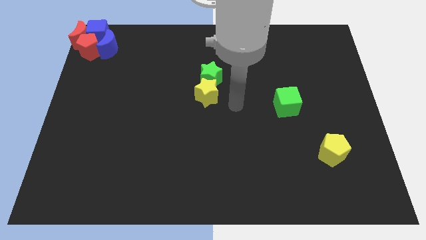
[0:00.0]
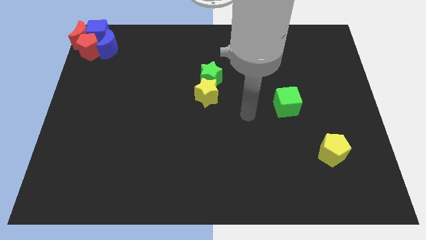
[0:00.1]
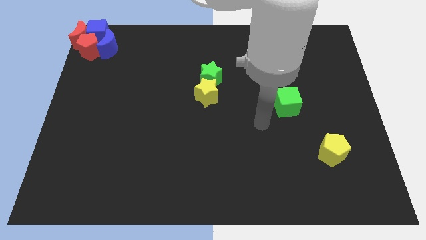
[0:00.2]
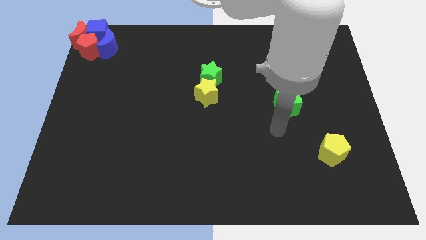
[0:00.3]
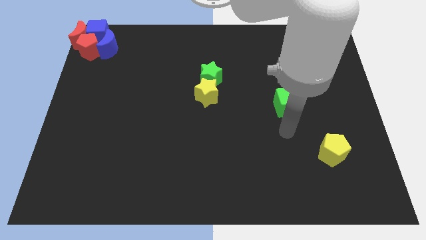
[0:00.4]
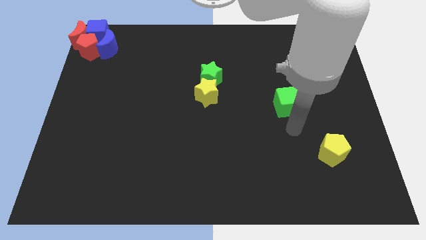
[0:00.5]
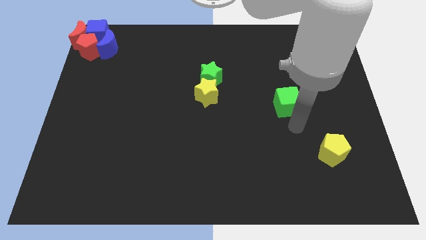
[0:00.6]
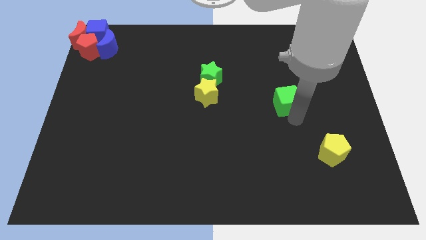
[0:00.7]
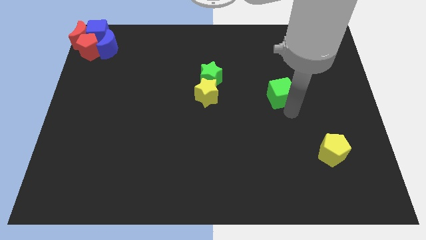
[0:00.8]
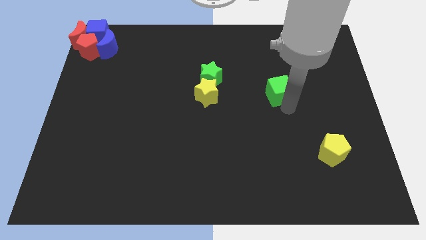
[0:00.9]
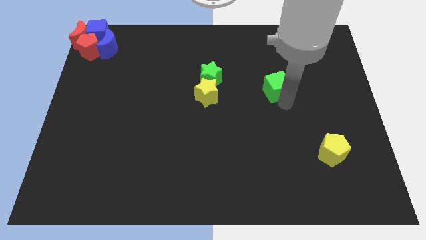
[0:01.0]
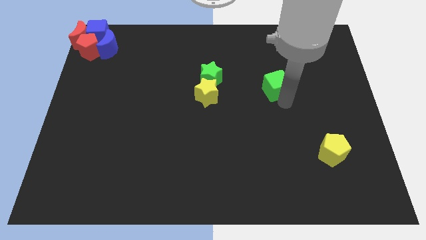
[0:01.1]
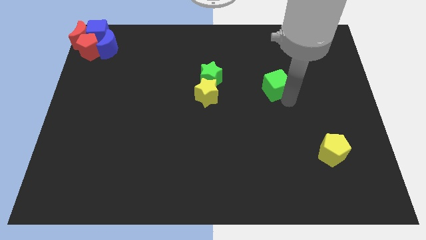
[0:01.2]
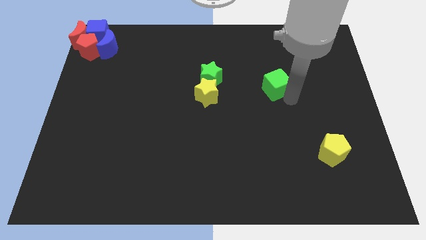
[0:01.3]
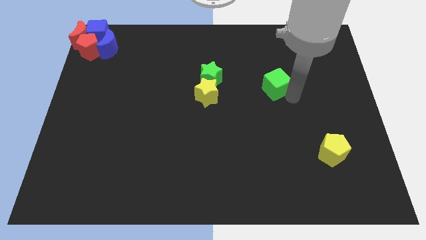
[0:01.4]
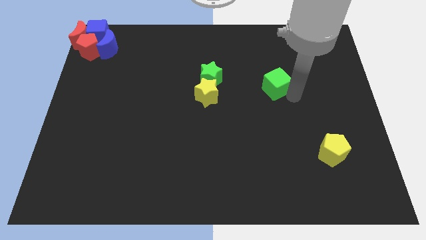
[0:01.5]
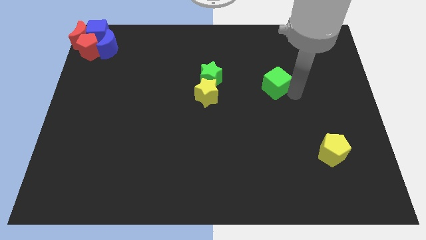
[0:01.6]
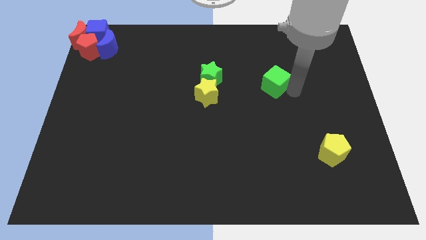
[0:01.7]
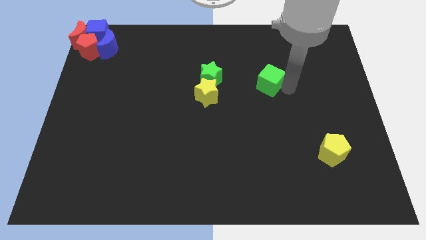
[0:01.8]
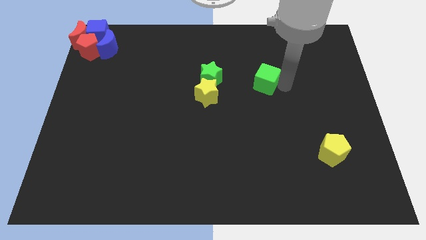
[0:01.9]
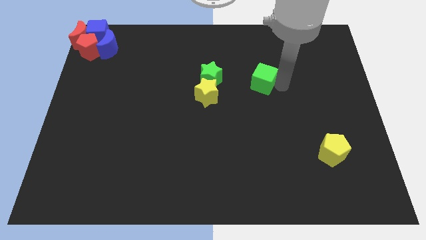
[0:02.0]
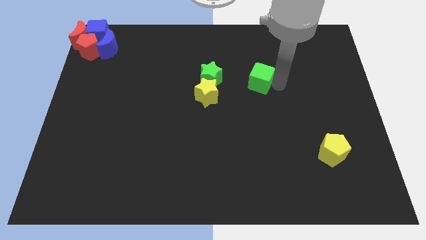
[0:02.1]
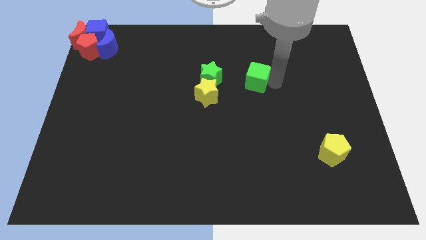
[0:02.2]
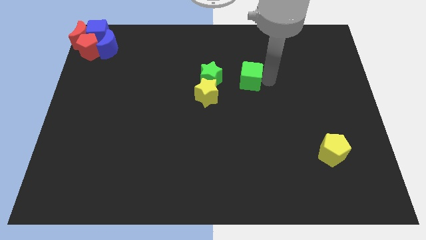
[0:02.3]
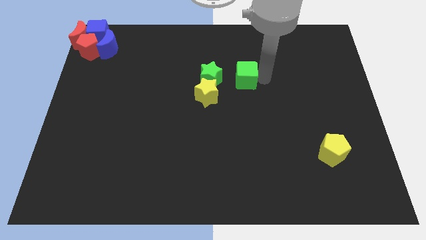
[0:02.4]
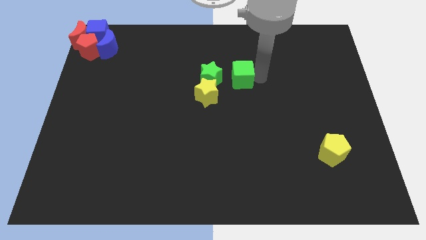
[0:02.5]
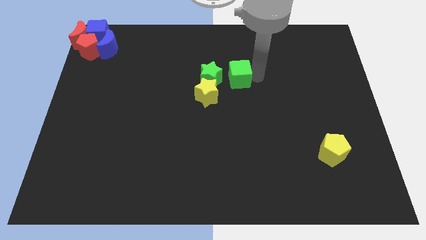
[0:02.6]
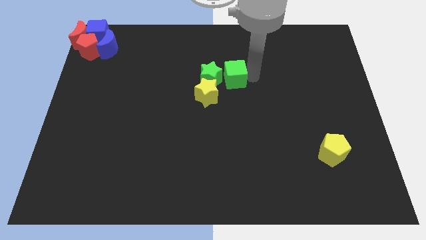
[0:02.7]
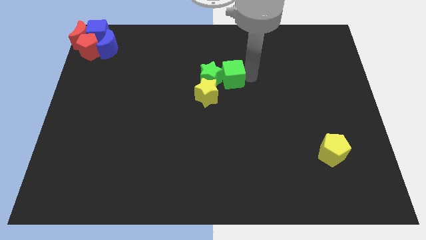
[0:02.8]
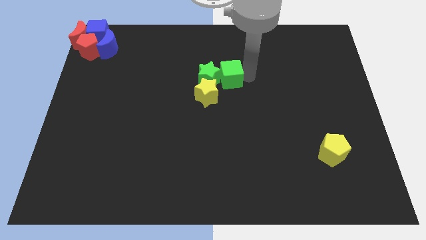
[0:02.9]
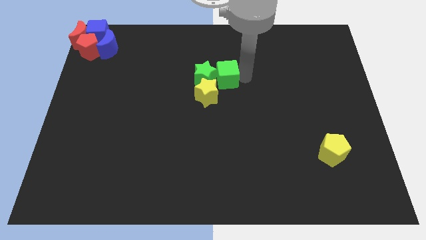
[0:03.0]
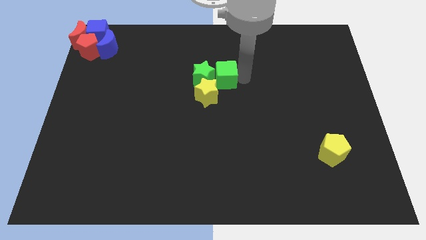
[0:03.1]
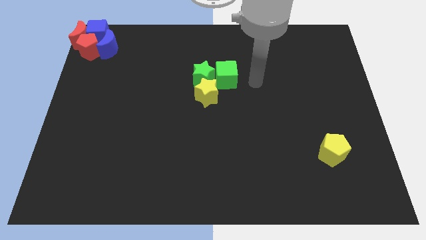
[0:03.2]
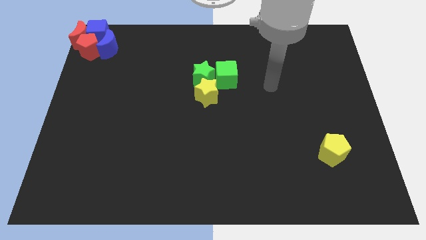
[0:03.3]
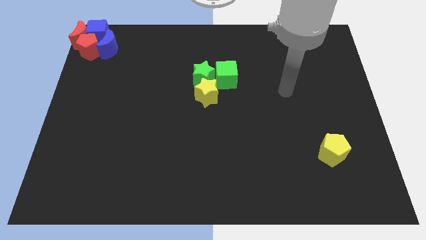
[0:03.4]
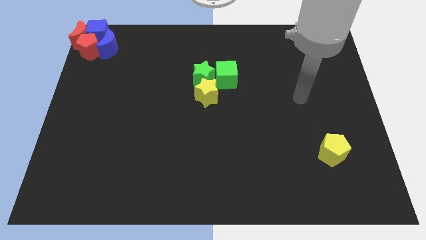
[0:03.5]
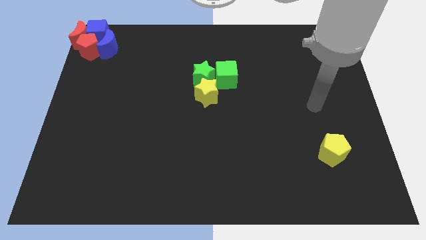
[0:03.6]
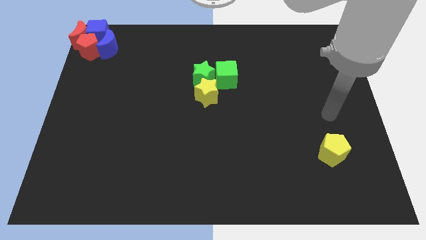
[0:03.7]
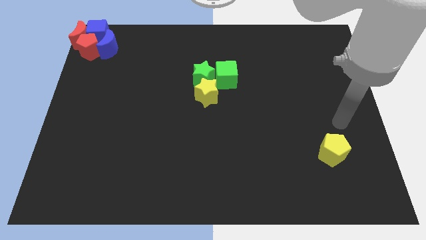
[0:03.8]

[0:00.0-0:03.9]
push the green cube to the right of the green star

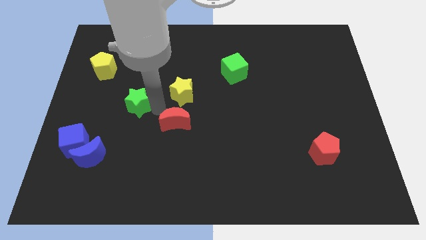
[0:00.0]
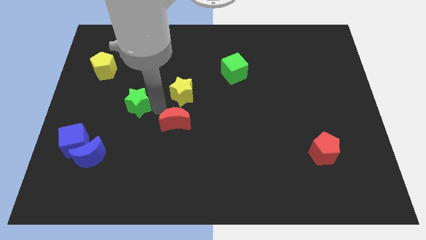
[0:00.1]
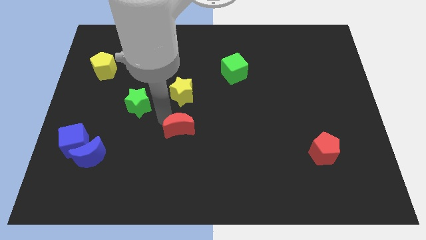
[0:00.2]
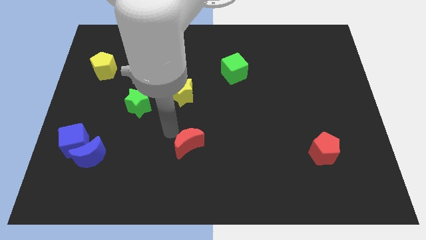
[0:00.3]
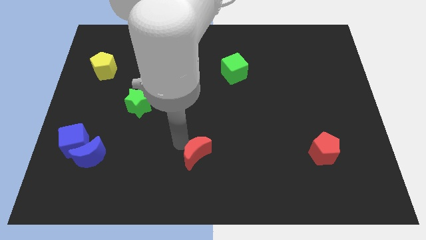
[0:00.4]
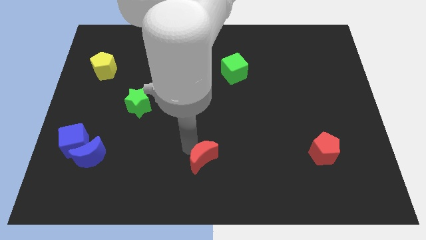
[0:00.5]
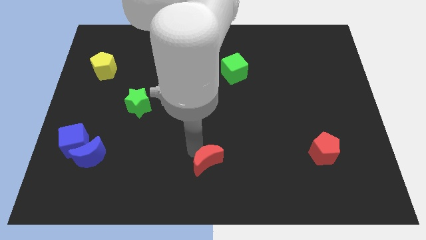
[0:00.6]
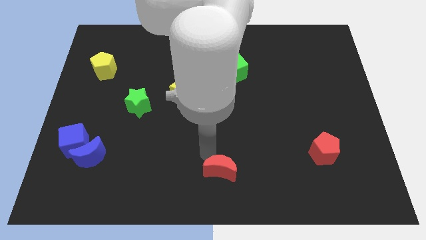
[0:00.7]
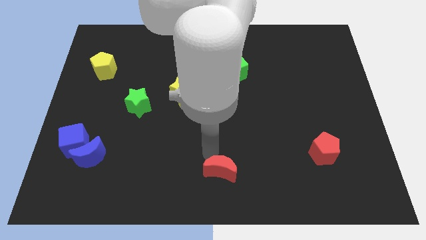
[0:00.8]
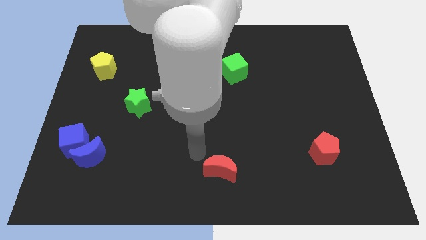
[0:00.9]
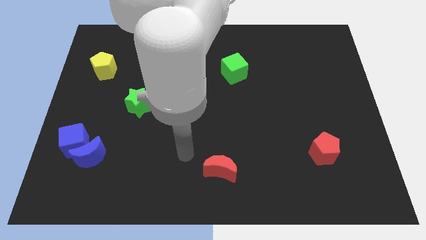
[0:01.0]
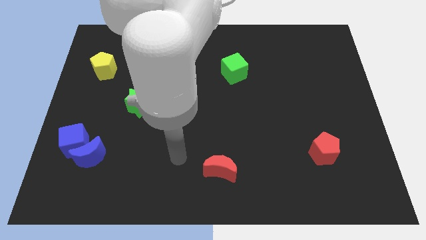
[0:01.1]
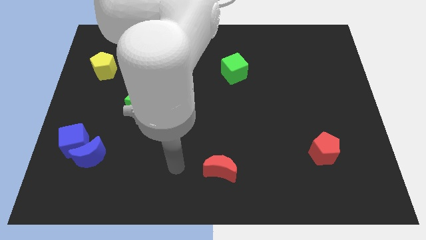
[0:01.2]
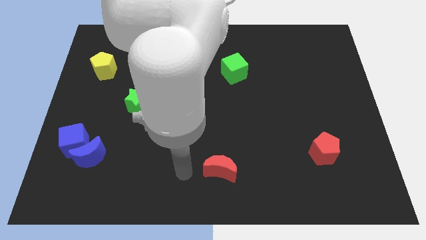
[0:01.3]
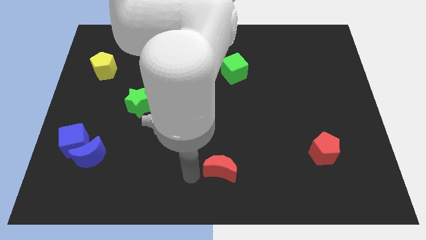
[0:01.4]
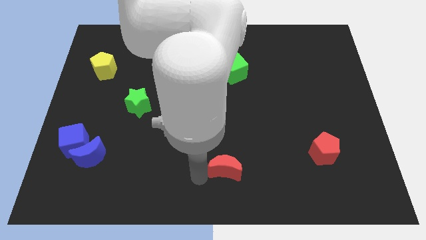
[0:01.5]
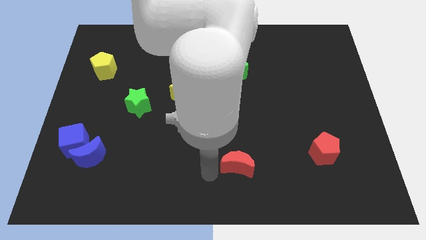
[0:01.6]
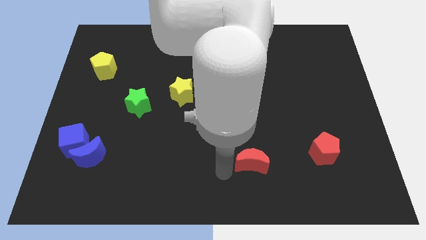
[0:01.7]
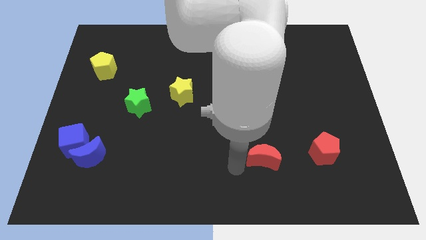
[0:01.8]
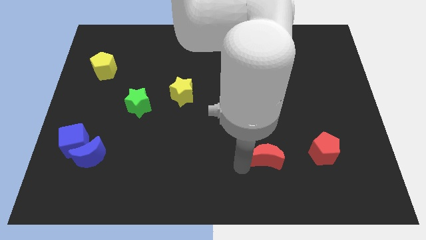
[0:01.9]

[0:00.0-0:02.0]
move the red moon slightly towards bottom right side

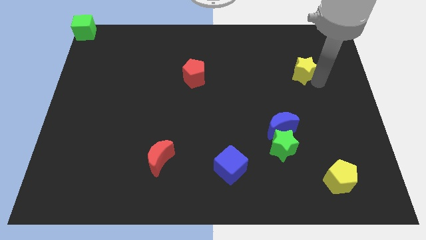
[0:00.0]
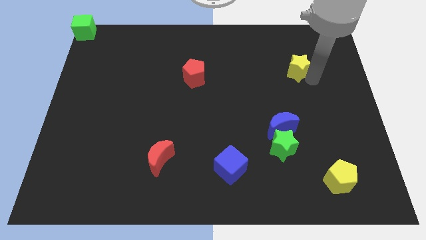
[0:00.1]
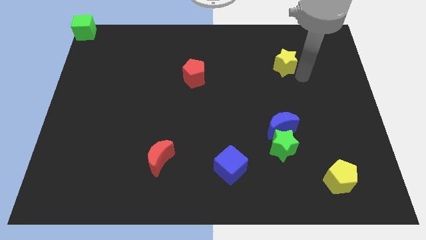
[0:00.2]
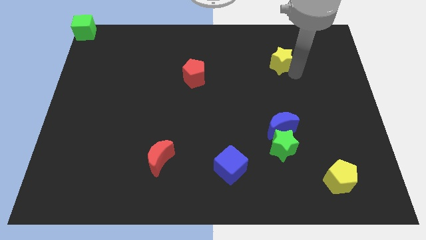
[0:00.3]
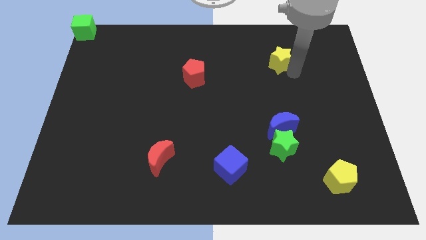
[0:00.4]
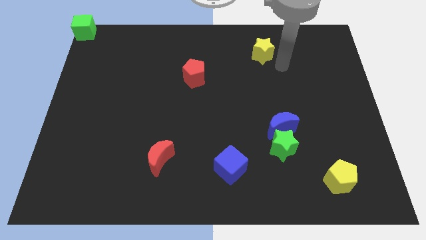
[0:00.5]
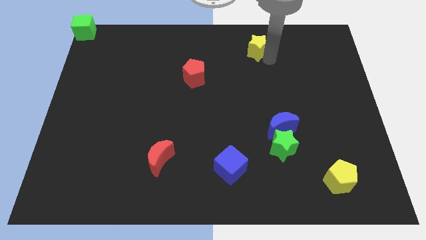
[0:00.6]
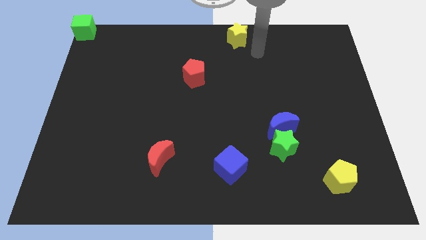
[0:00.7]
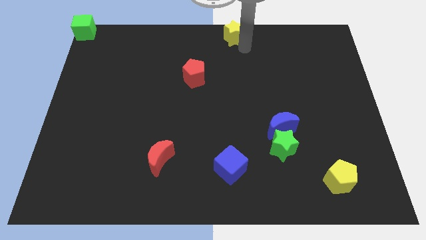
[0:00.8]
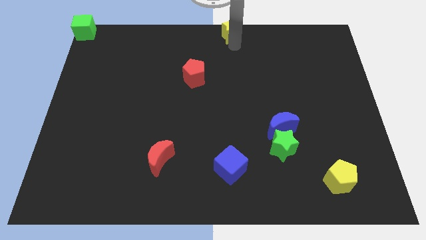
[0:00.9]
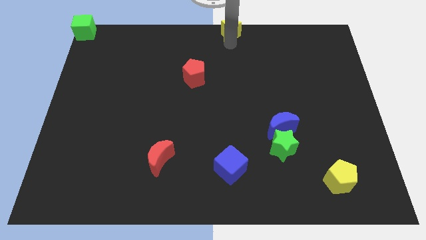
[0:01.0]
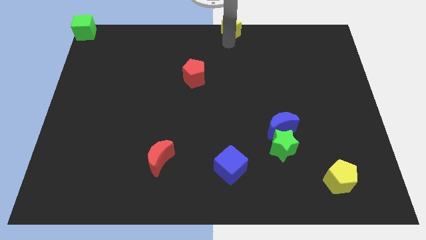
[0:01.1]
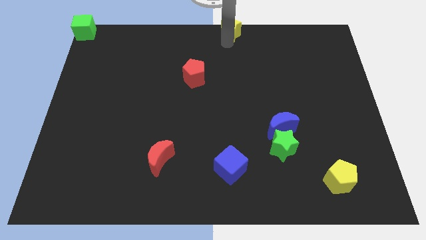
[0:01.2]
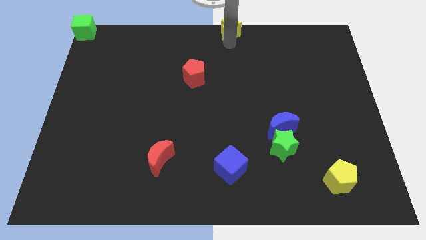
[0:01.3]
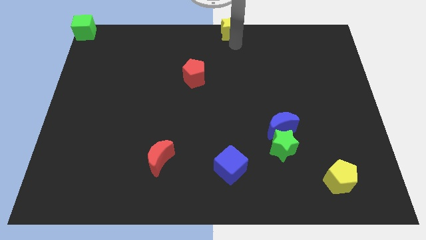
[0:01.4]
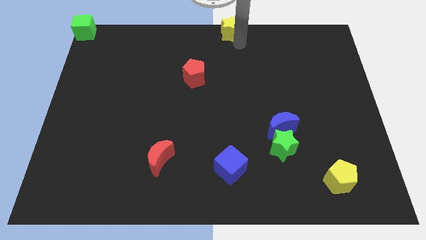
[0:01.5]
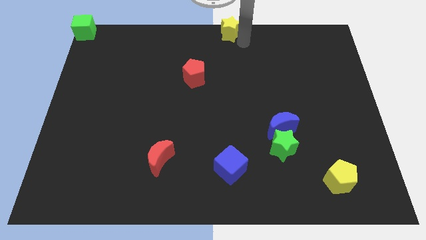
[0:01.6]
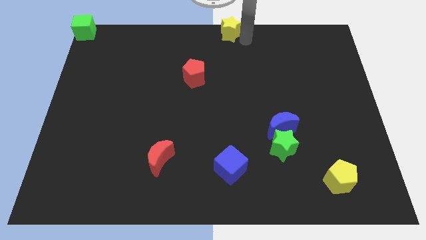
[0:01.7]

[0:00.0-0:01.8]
push the yellow star to center top

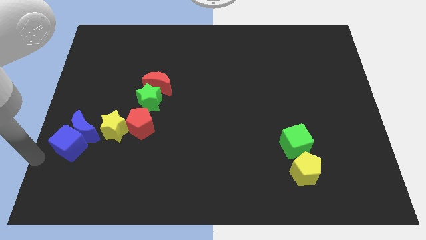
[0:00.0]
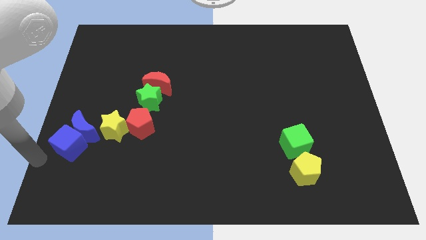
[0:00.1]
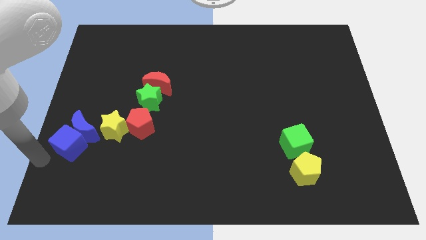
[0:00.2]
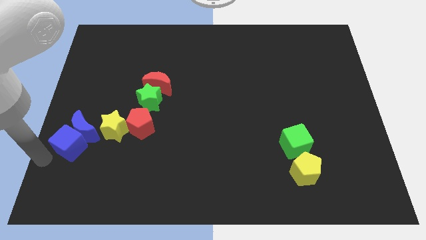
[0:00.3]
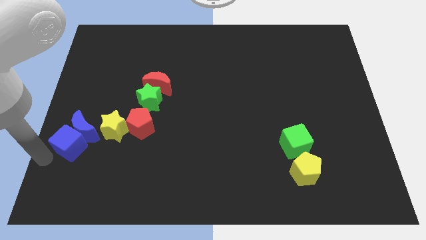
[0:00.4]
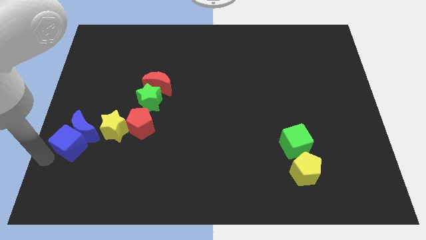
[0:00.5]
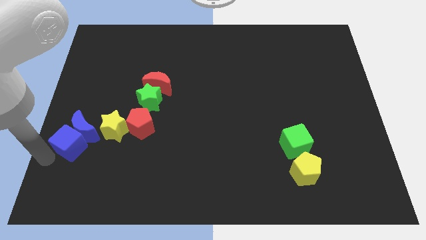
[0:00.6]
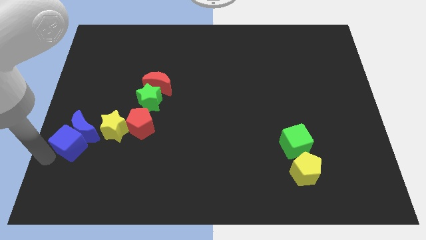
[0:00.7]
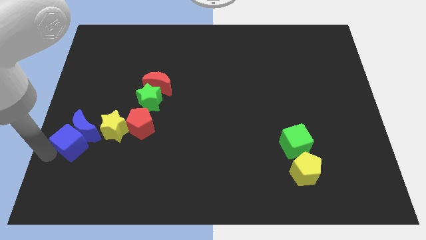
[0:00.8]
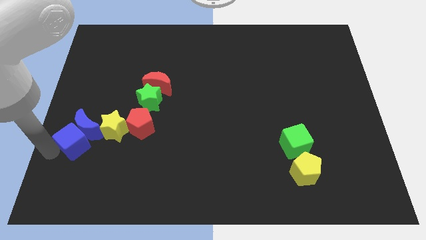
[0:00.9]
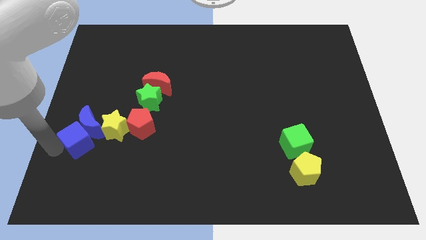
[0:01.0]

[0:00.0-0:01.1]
slightly push the blue block into the group of block
